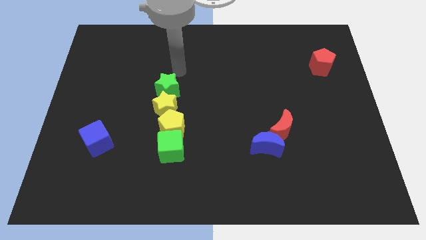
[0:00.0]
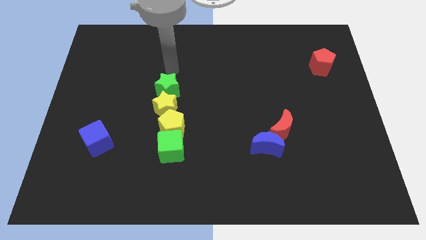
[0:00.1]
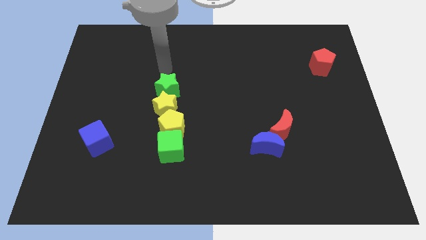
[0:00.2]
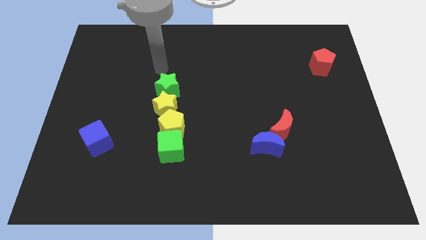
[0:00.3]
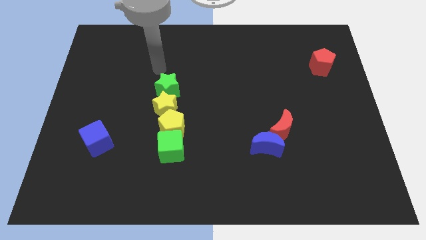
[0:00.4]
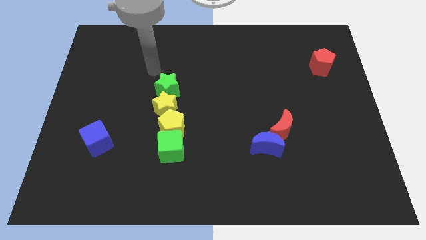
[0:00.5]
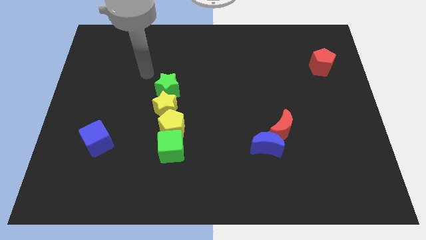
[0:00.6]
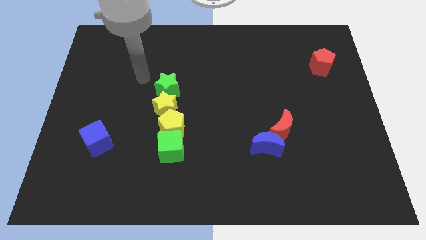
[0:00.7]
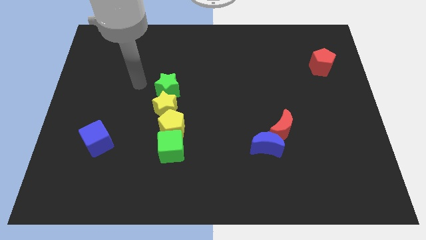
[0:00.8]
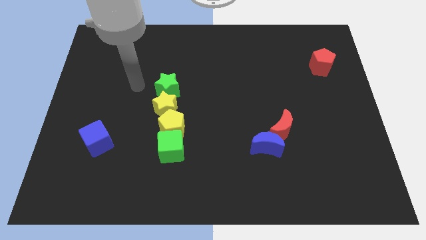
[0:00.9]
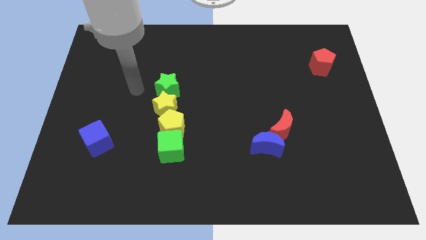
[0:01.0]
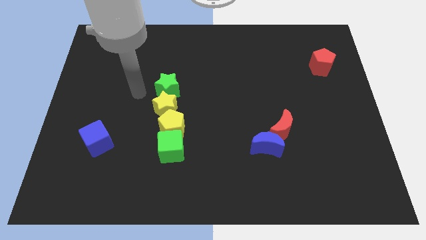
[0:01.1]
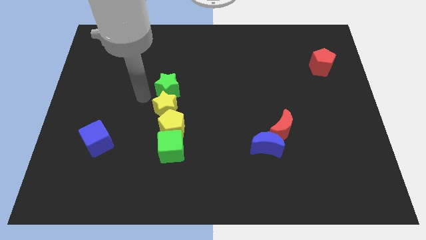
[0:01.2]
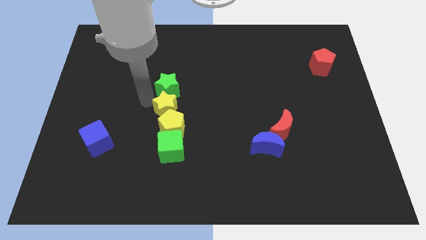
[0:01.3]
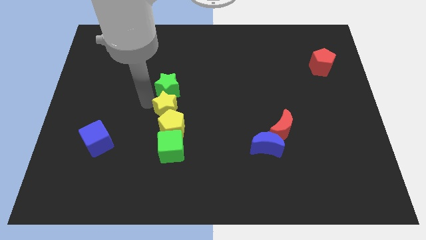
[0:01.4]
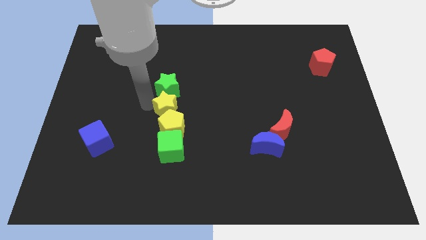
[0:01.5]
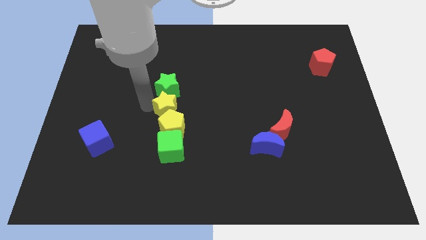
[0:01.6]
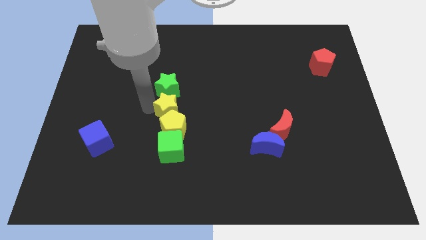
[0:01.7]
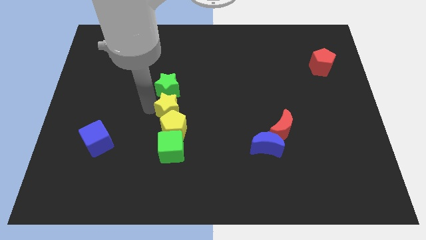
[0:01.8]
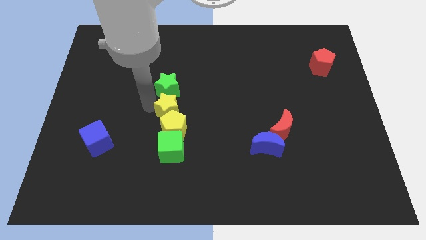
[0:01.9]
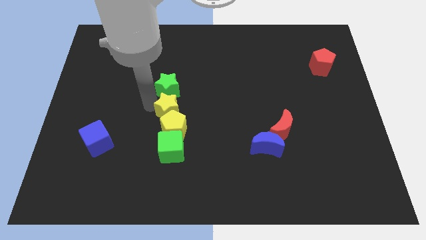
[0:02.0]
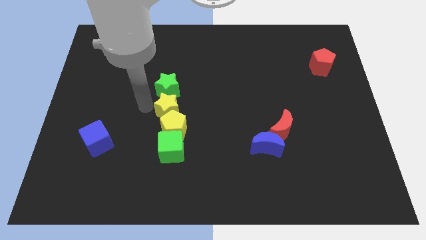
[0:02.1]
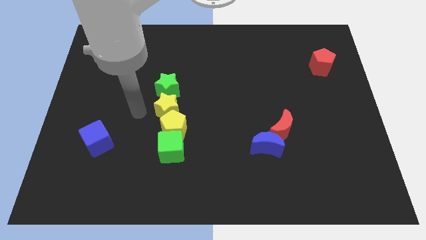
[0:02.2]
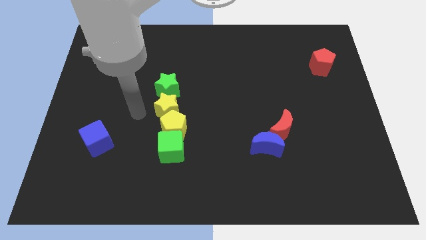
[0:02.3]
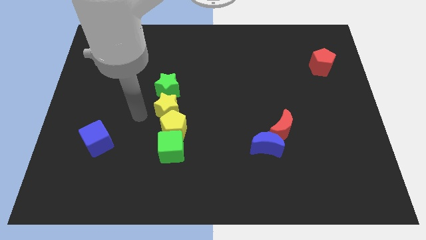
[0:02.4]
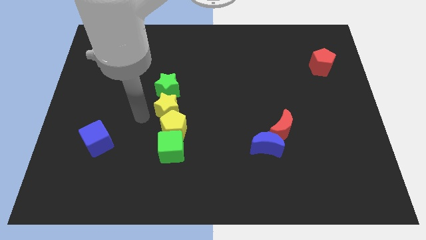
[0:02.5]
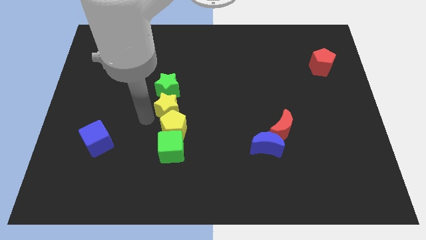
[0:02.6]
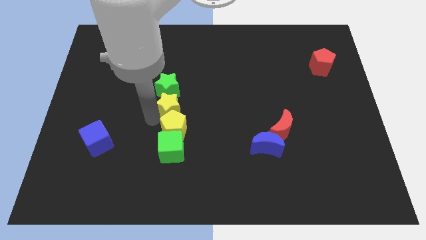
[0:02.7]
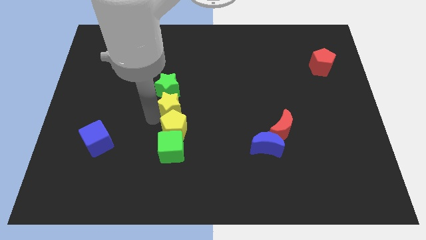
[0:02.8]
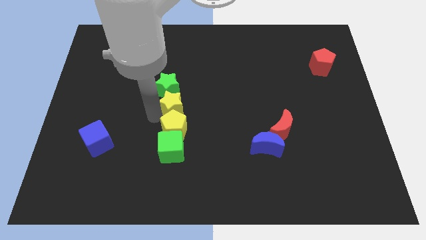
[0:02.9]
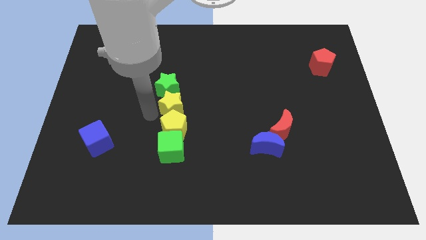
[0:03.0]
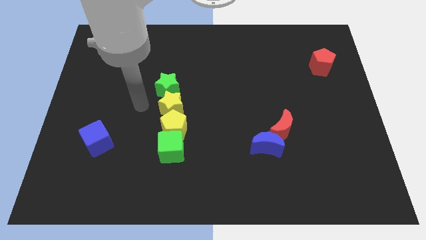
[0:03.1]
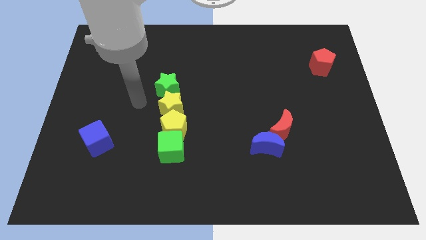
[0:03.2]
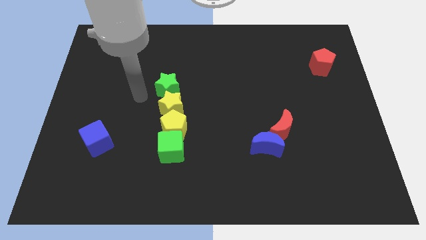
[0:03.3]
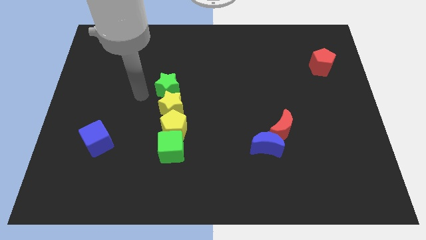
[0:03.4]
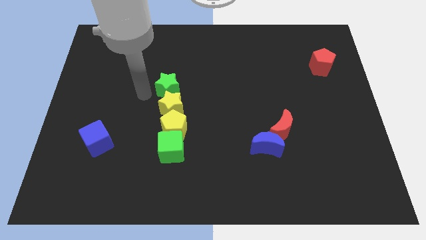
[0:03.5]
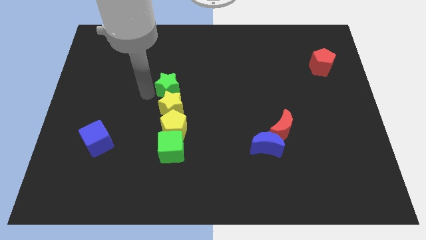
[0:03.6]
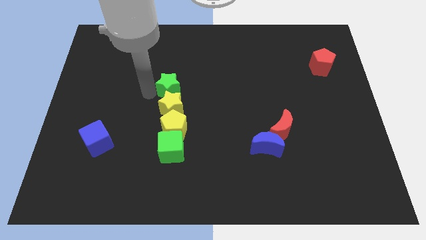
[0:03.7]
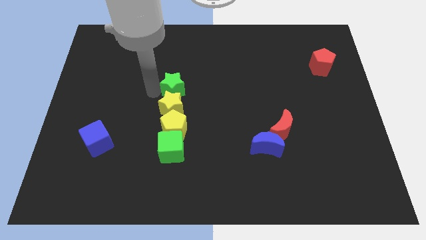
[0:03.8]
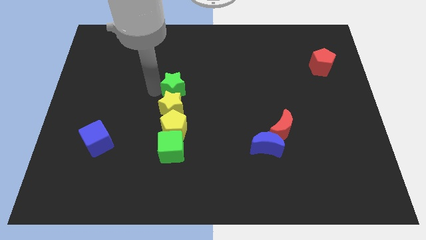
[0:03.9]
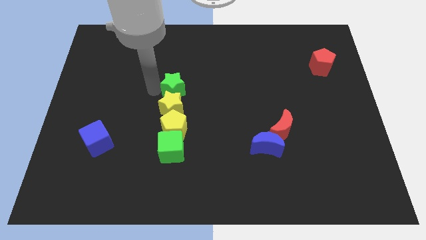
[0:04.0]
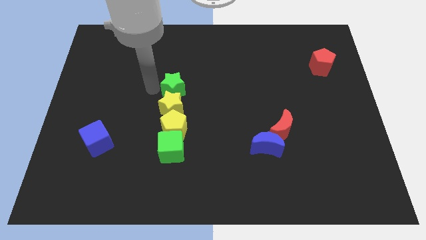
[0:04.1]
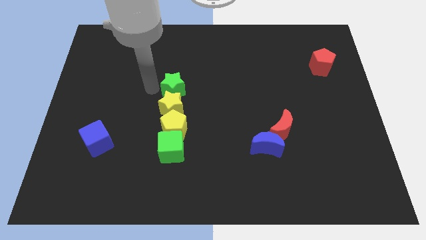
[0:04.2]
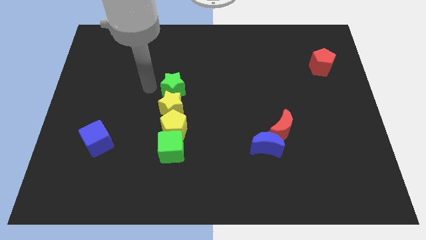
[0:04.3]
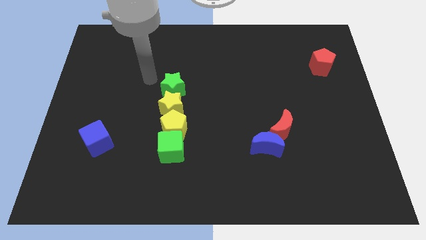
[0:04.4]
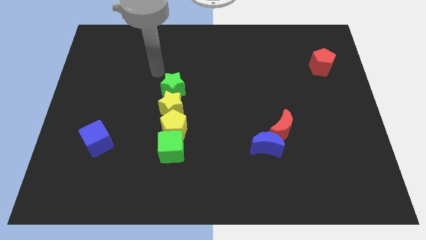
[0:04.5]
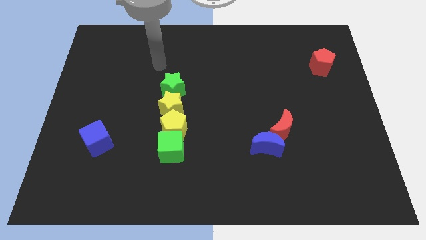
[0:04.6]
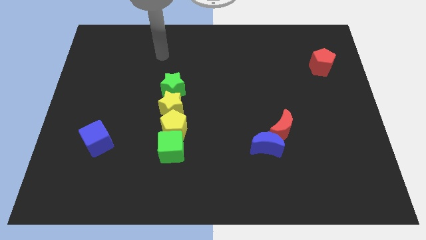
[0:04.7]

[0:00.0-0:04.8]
adjust the green and yellow stars at the top side of the yellow pentagon

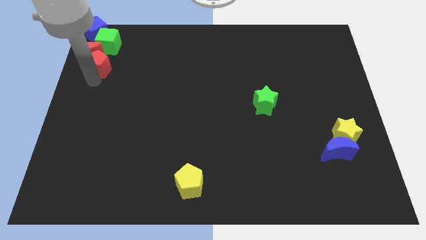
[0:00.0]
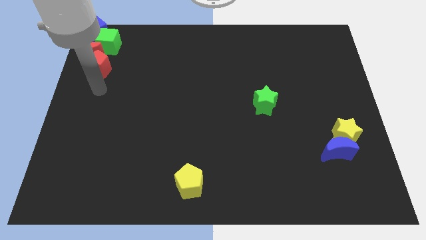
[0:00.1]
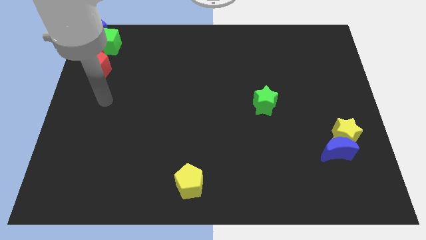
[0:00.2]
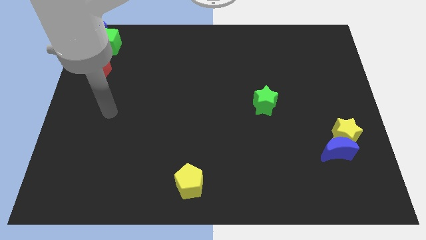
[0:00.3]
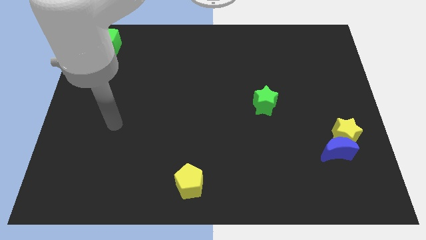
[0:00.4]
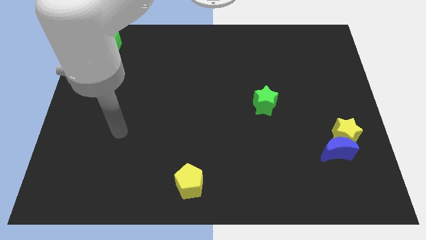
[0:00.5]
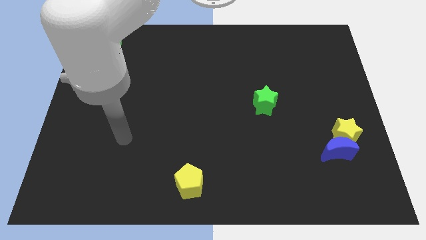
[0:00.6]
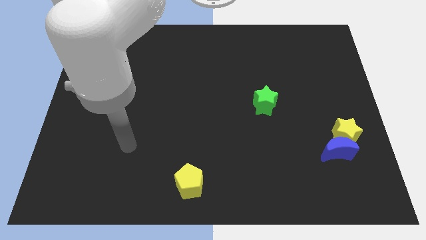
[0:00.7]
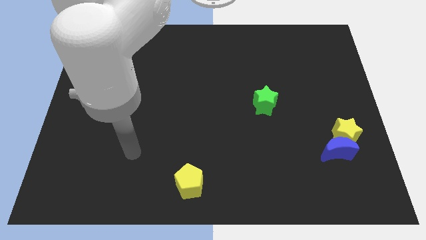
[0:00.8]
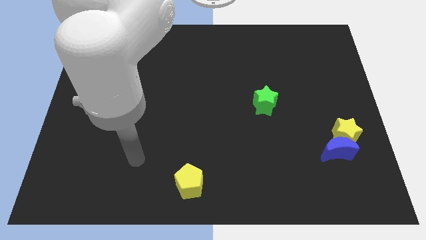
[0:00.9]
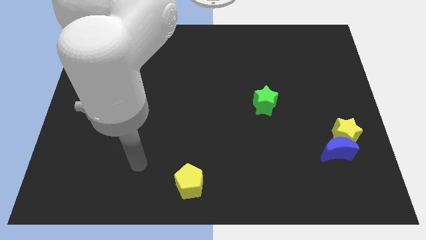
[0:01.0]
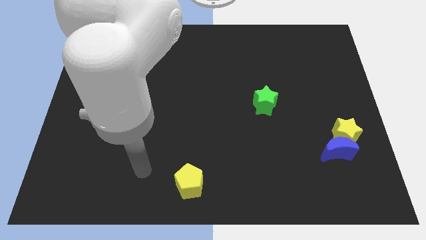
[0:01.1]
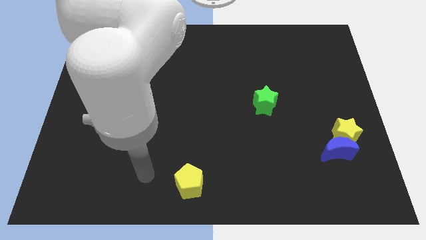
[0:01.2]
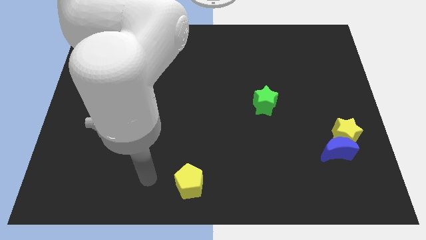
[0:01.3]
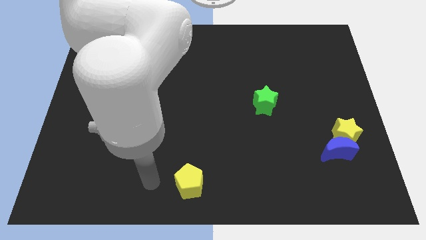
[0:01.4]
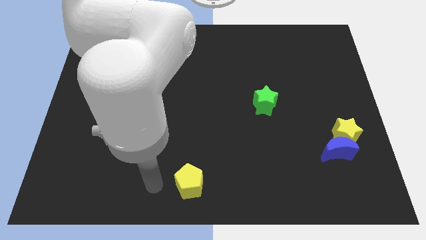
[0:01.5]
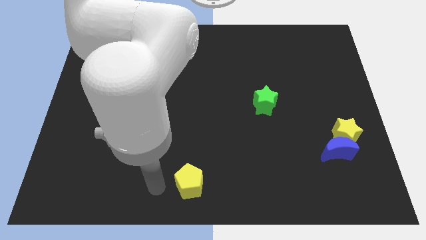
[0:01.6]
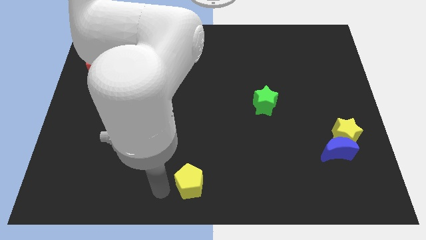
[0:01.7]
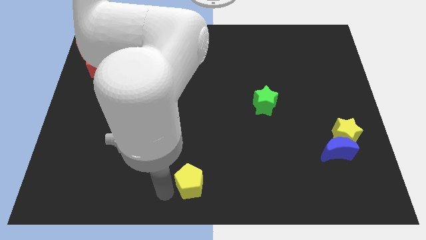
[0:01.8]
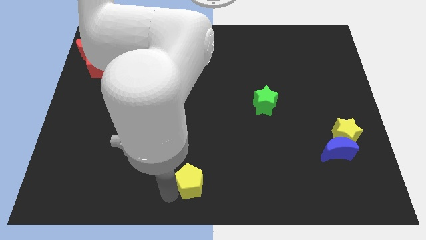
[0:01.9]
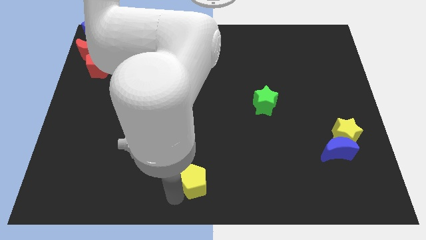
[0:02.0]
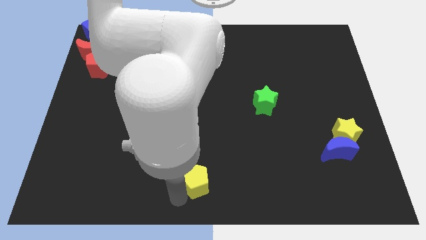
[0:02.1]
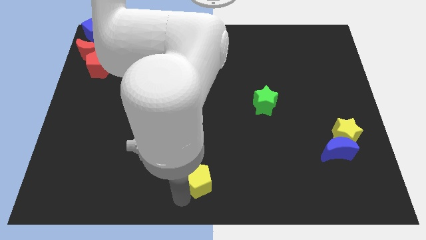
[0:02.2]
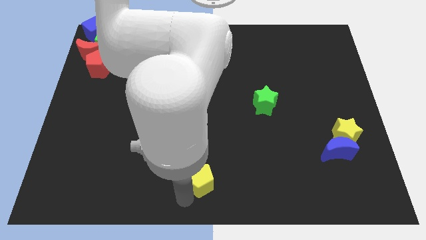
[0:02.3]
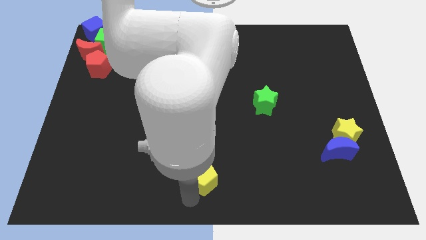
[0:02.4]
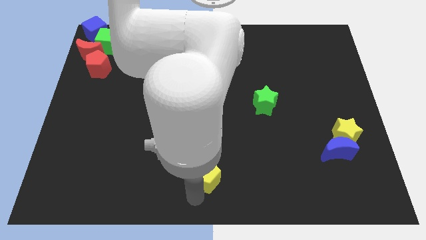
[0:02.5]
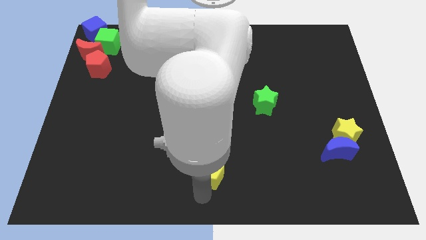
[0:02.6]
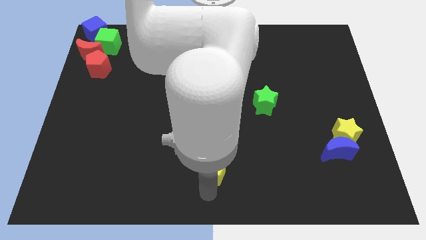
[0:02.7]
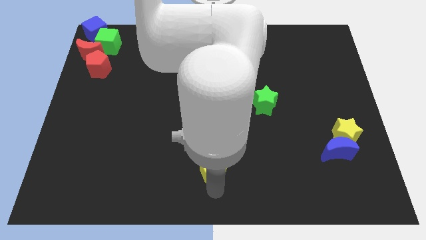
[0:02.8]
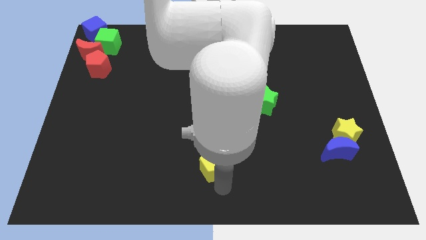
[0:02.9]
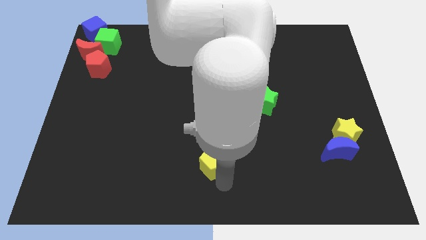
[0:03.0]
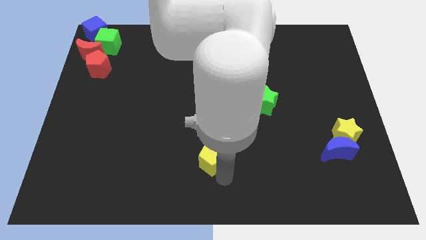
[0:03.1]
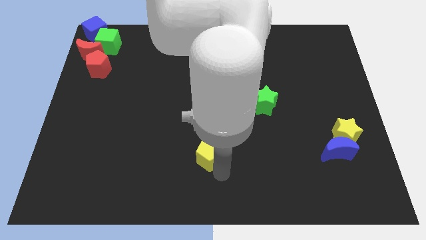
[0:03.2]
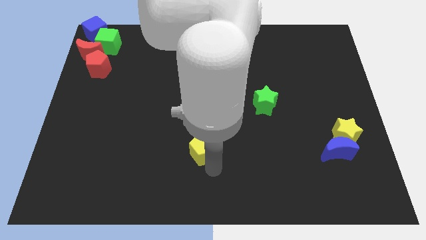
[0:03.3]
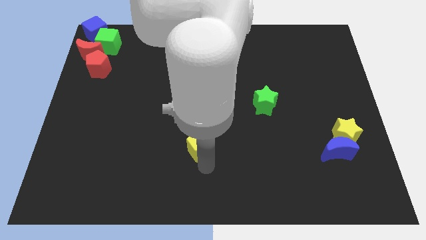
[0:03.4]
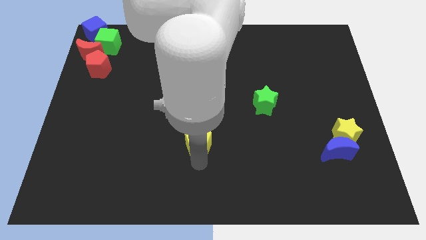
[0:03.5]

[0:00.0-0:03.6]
push the yellow pentagon upwards

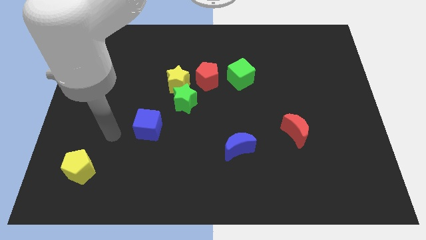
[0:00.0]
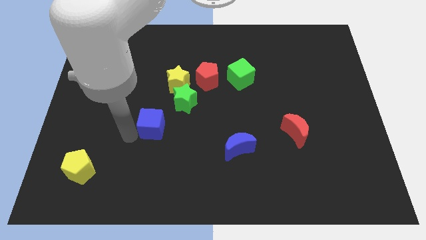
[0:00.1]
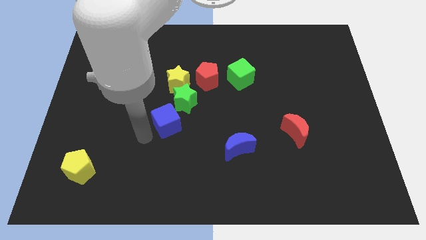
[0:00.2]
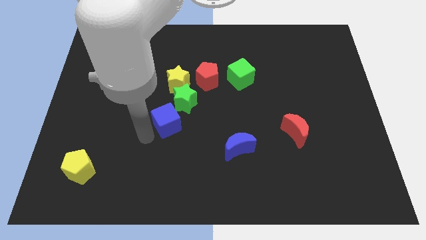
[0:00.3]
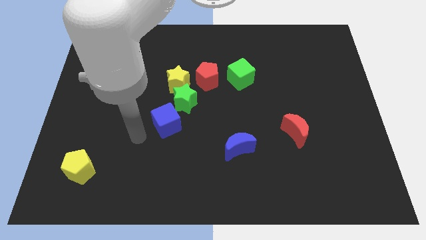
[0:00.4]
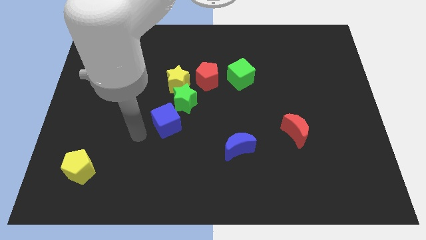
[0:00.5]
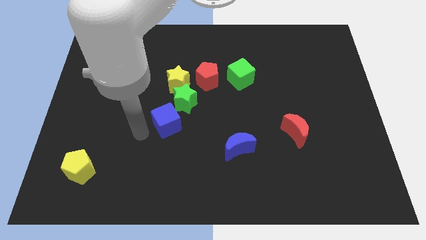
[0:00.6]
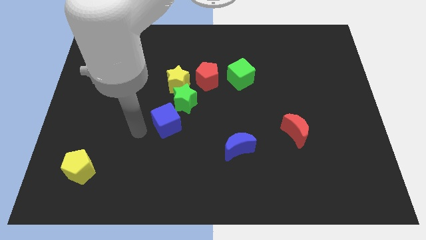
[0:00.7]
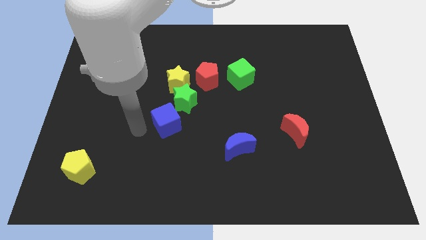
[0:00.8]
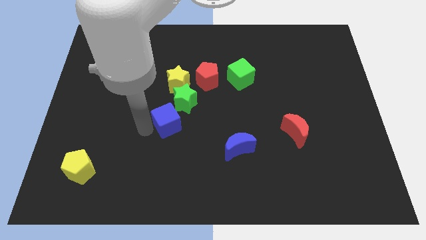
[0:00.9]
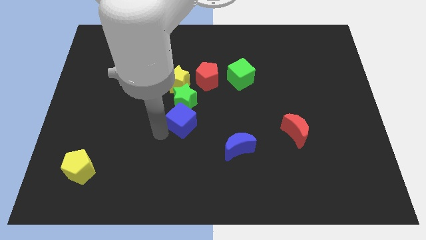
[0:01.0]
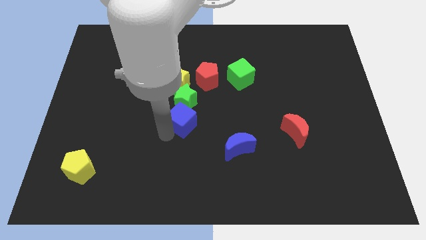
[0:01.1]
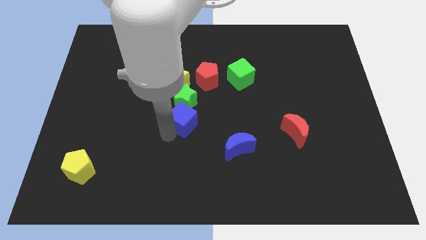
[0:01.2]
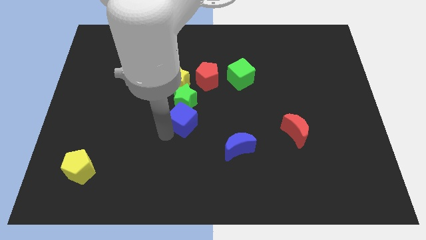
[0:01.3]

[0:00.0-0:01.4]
move the blue block below the green star
